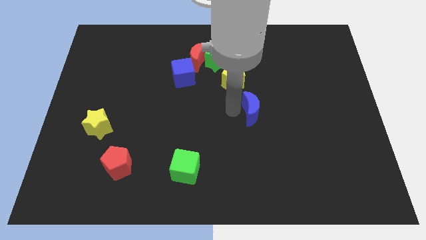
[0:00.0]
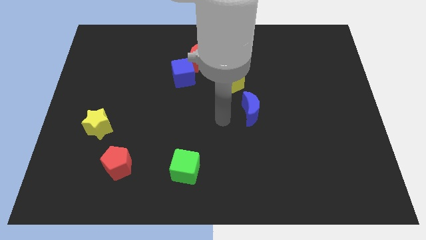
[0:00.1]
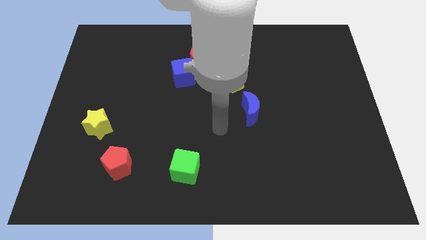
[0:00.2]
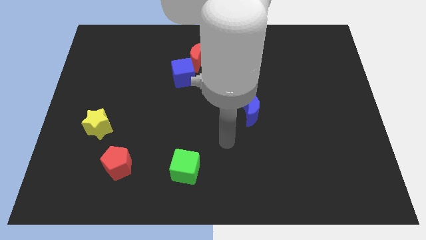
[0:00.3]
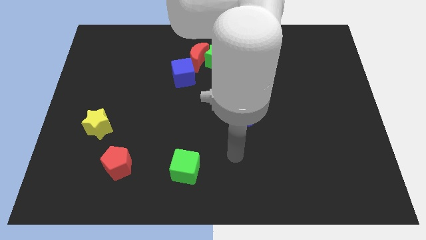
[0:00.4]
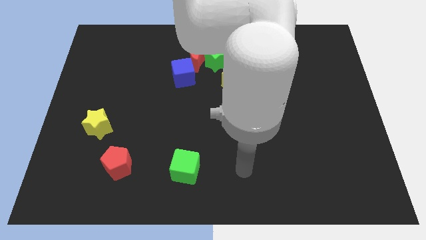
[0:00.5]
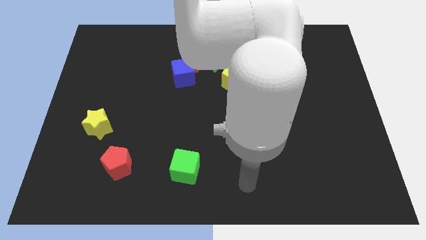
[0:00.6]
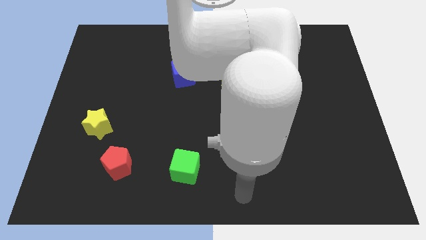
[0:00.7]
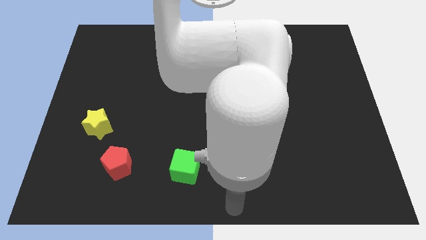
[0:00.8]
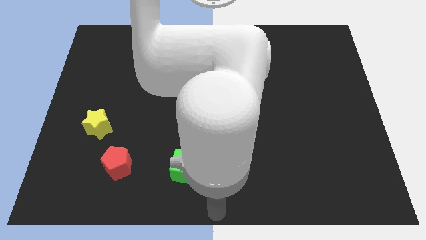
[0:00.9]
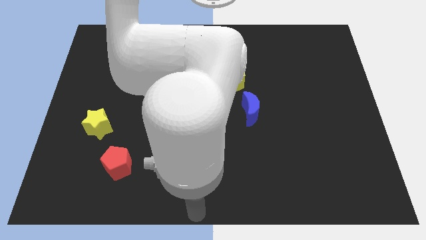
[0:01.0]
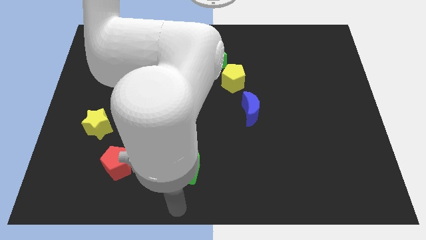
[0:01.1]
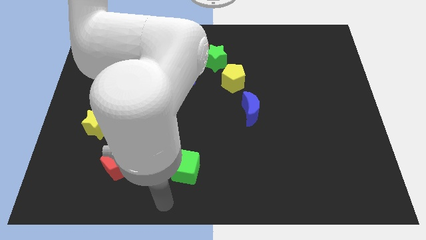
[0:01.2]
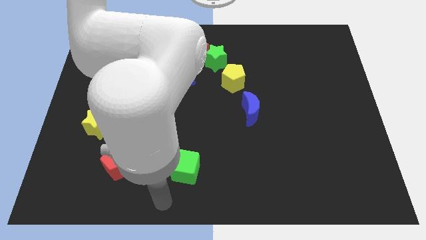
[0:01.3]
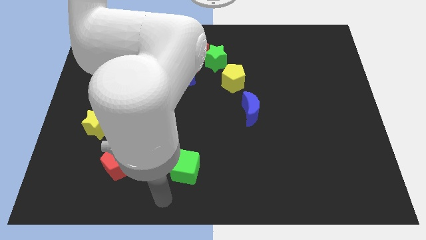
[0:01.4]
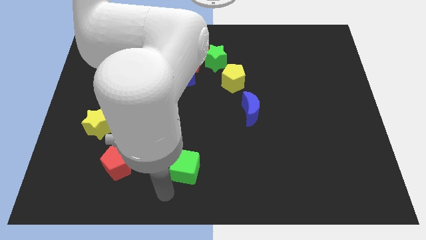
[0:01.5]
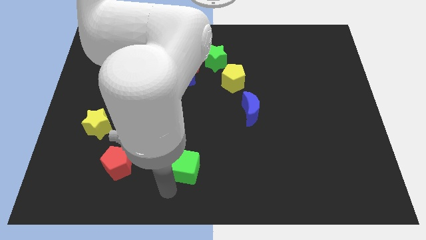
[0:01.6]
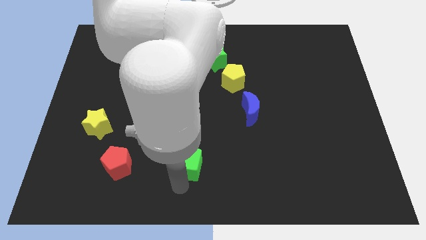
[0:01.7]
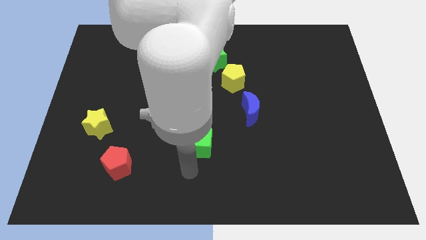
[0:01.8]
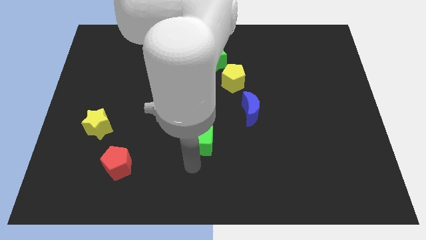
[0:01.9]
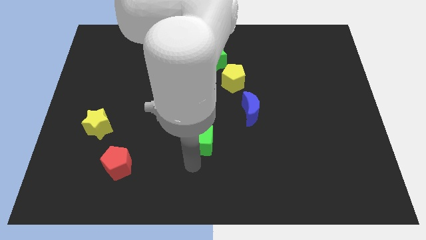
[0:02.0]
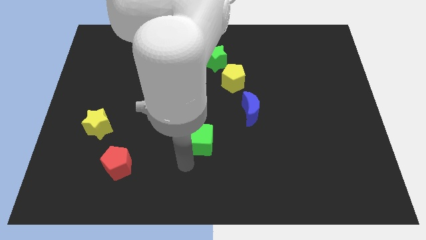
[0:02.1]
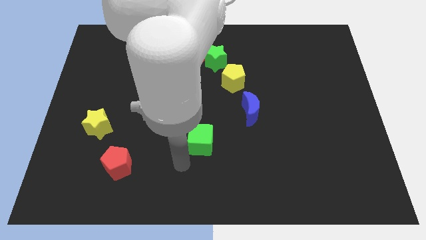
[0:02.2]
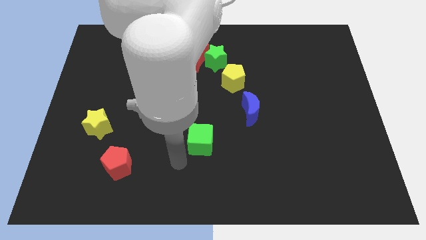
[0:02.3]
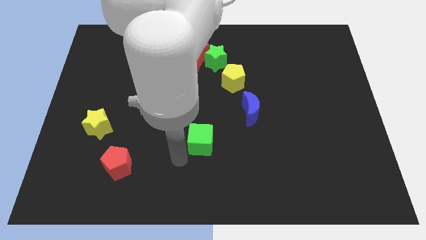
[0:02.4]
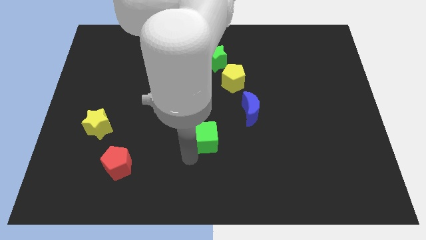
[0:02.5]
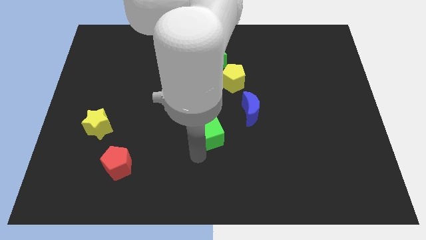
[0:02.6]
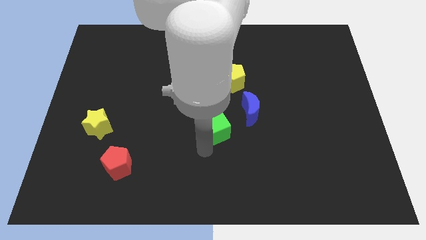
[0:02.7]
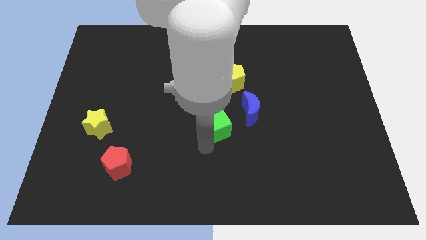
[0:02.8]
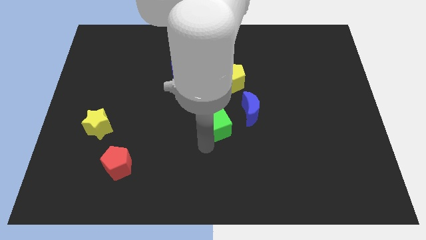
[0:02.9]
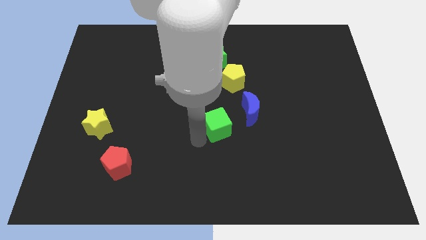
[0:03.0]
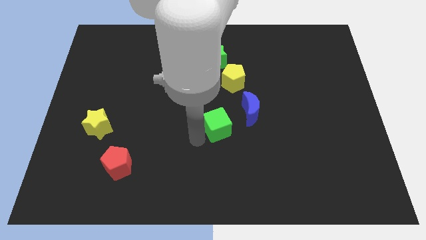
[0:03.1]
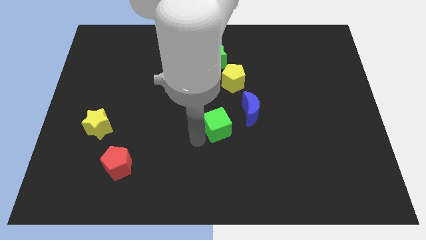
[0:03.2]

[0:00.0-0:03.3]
push green cube towards blue crescent

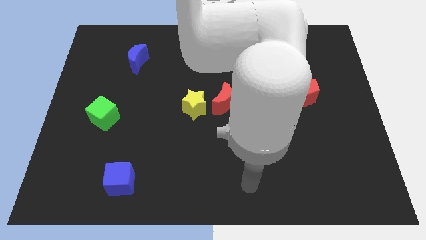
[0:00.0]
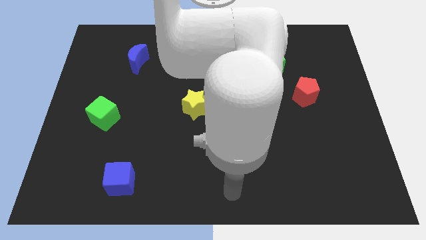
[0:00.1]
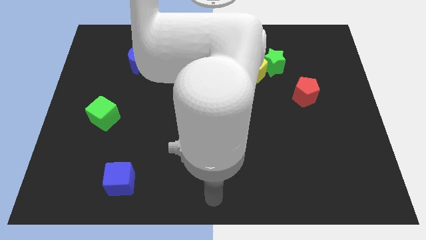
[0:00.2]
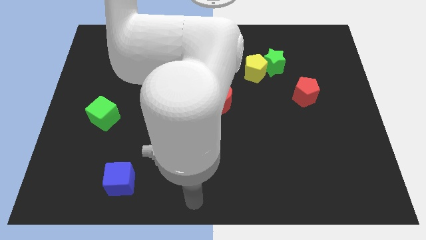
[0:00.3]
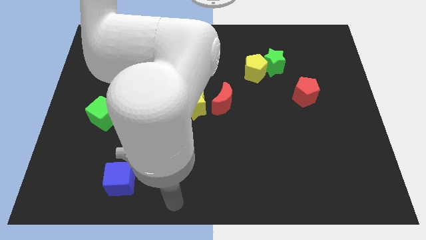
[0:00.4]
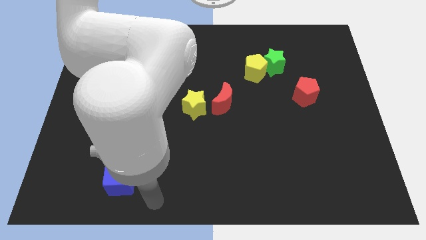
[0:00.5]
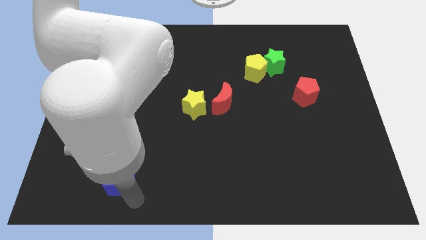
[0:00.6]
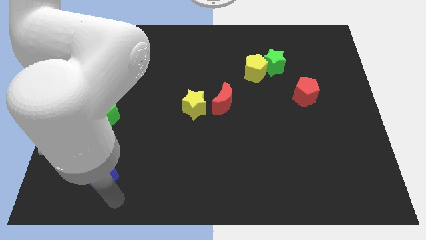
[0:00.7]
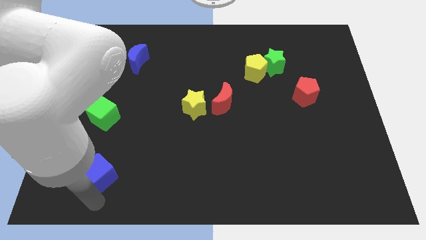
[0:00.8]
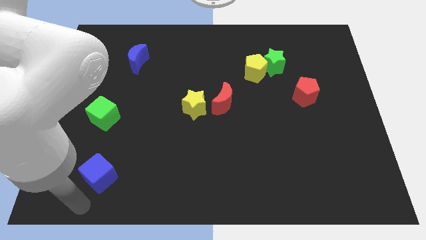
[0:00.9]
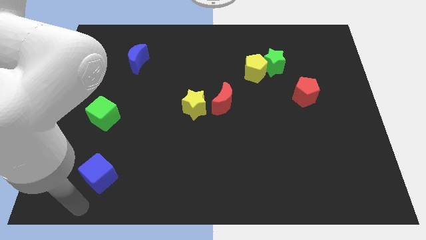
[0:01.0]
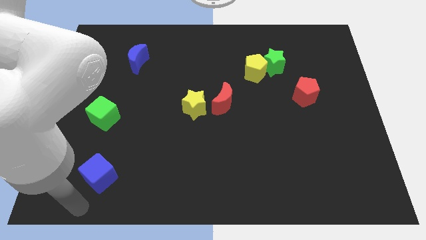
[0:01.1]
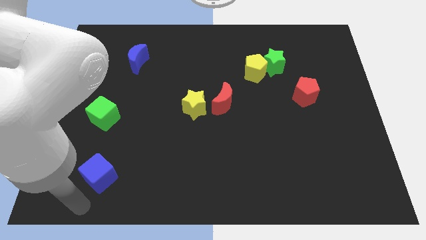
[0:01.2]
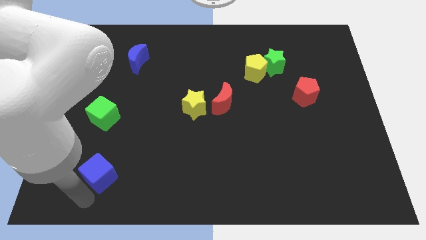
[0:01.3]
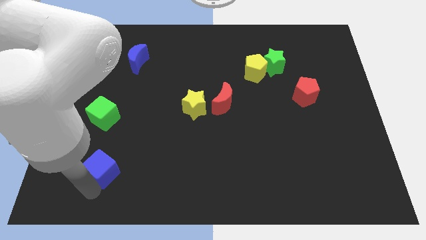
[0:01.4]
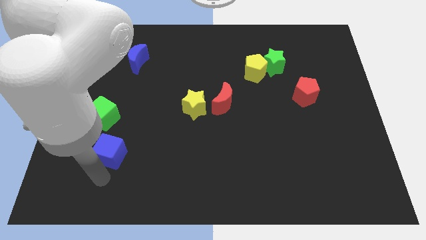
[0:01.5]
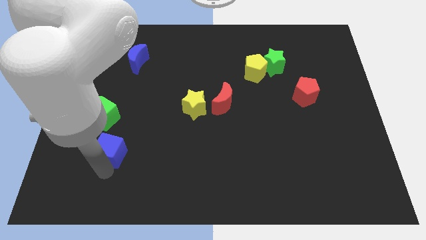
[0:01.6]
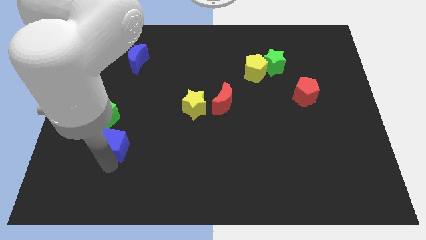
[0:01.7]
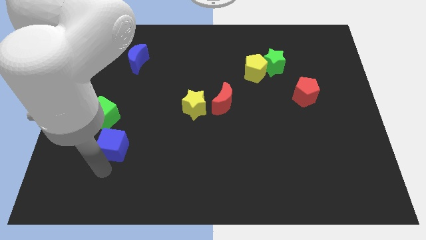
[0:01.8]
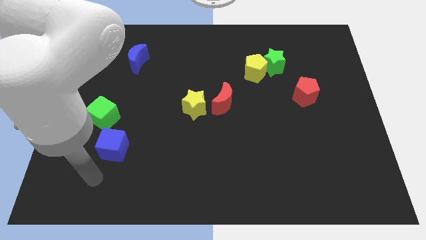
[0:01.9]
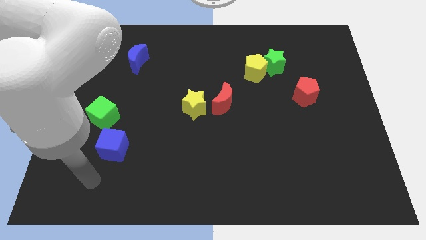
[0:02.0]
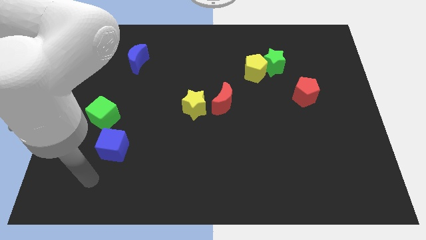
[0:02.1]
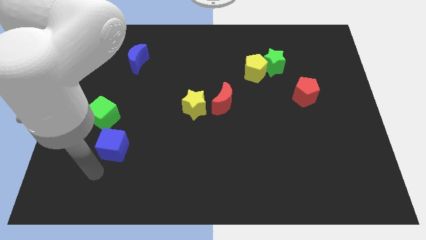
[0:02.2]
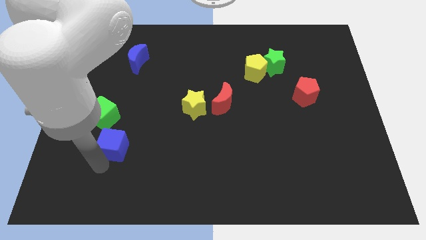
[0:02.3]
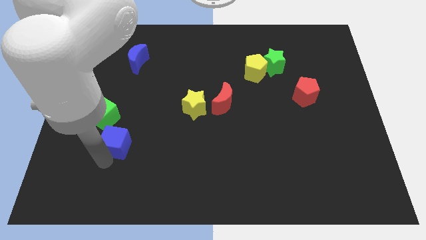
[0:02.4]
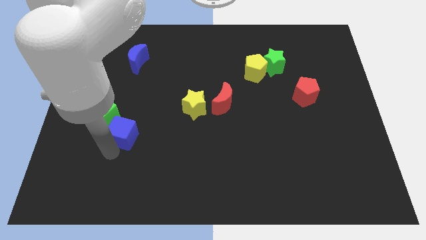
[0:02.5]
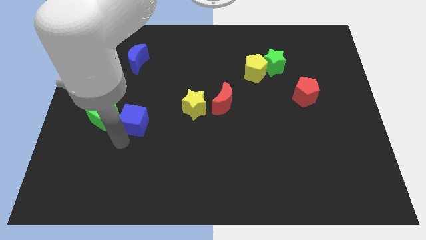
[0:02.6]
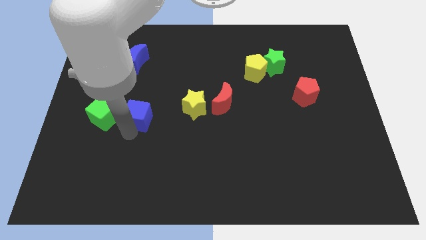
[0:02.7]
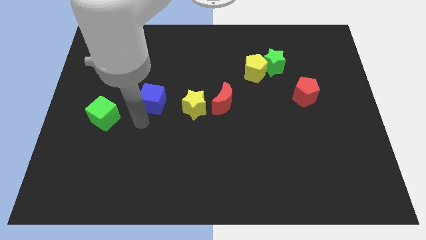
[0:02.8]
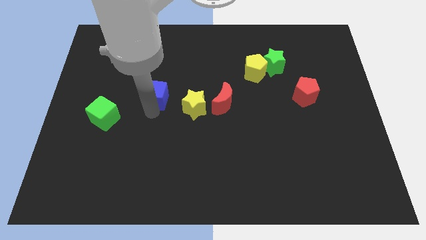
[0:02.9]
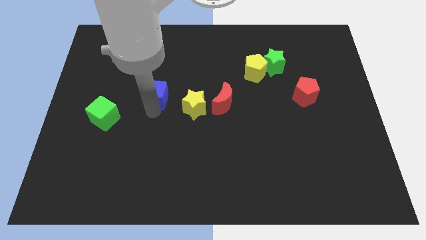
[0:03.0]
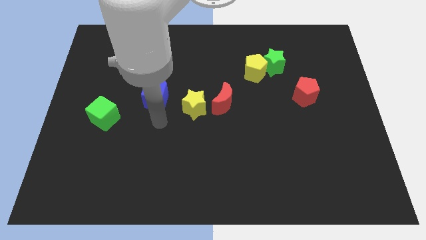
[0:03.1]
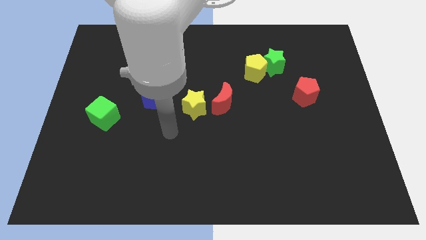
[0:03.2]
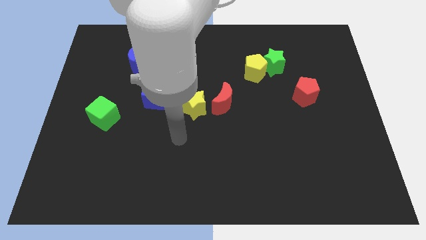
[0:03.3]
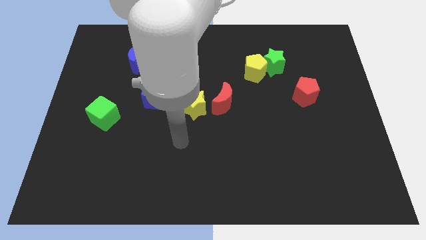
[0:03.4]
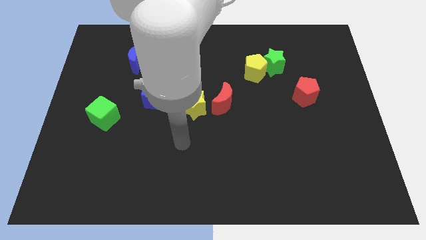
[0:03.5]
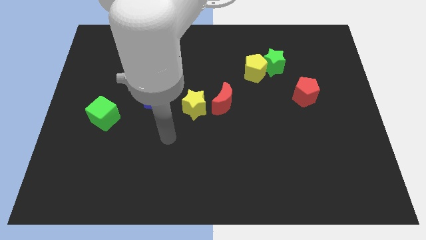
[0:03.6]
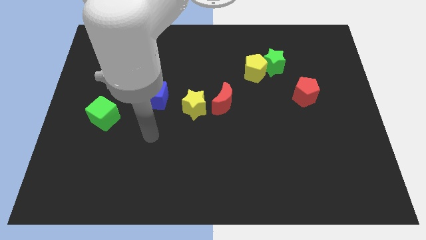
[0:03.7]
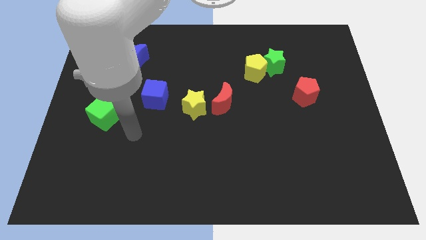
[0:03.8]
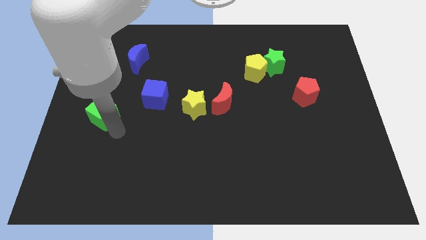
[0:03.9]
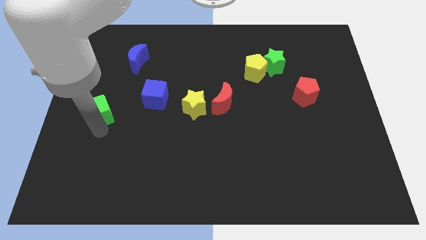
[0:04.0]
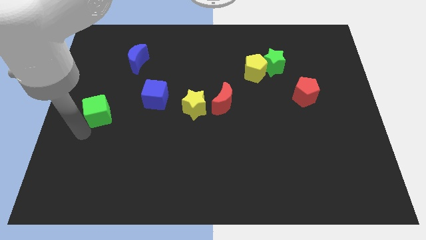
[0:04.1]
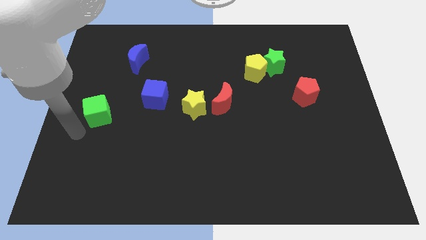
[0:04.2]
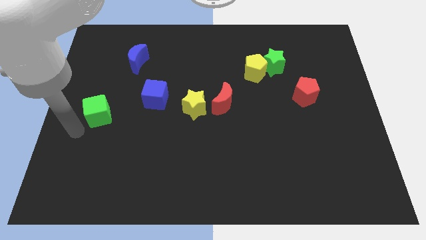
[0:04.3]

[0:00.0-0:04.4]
place the blue cube diagonally top left to the yellow star

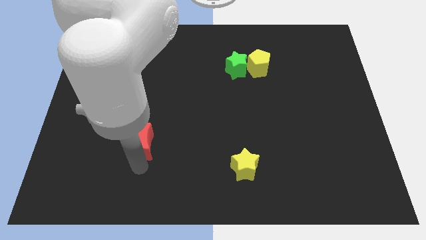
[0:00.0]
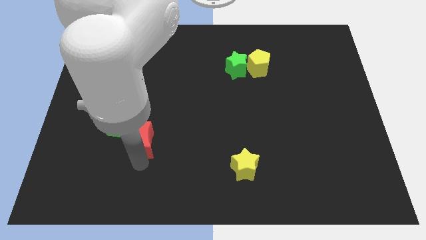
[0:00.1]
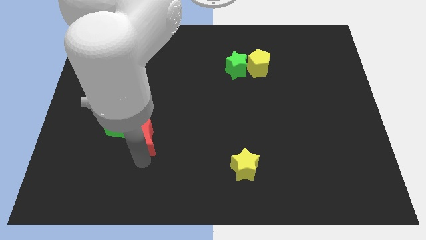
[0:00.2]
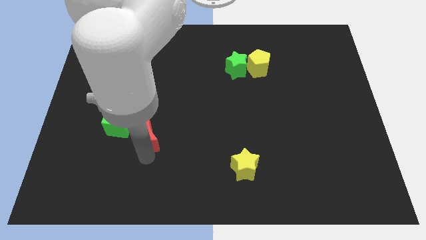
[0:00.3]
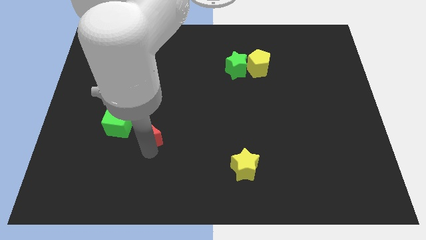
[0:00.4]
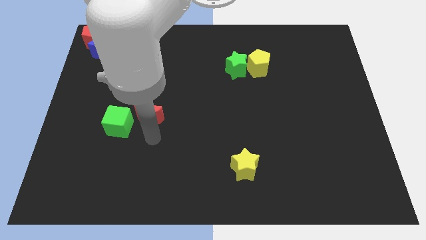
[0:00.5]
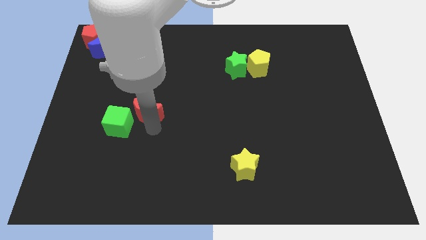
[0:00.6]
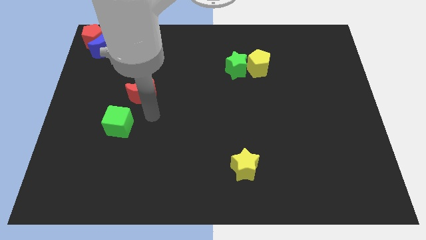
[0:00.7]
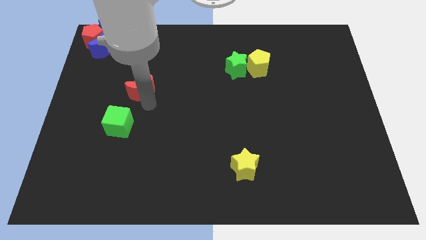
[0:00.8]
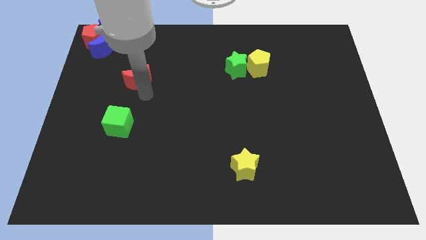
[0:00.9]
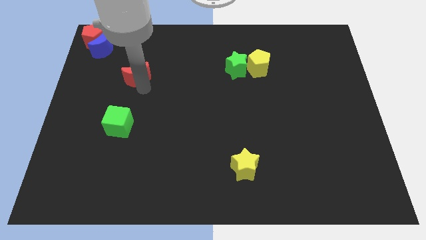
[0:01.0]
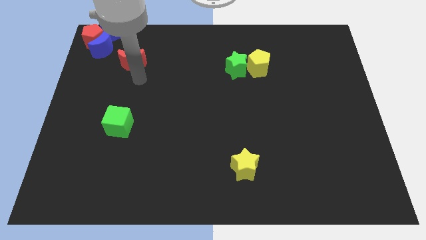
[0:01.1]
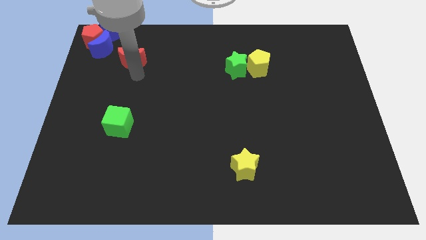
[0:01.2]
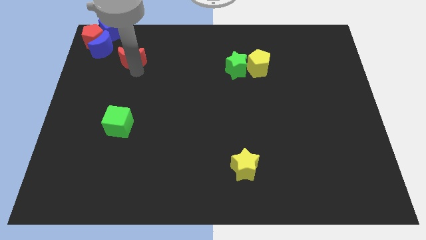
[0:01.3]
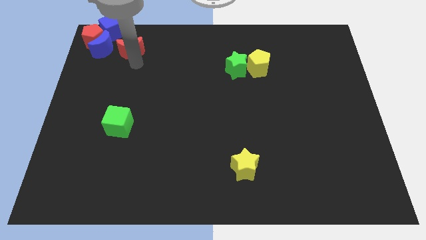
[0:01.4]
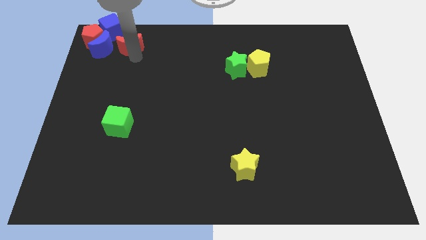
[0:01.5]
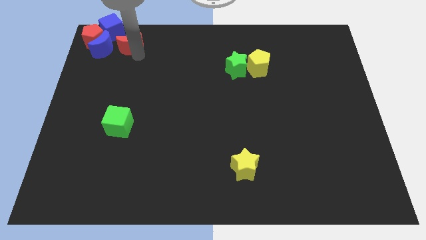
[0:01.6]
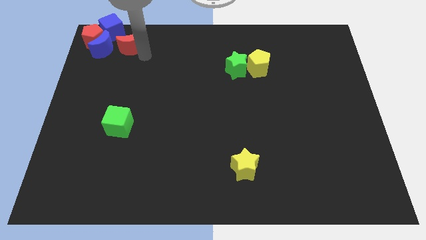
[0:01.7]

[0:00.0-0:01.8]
move the red crescent towards the blue cube
